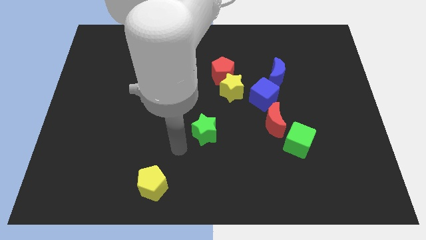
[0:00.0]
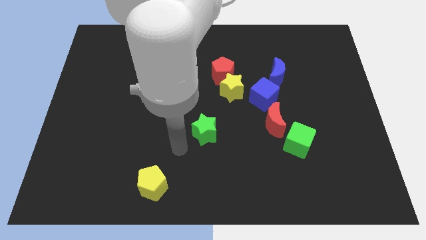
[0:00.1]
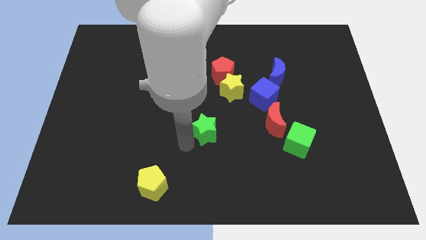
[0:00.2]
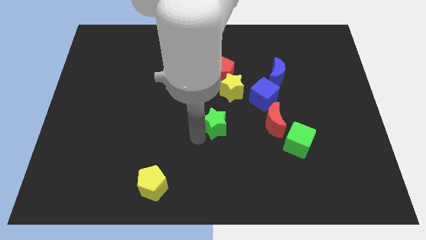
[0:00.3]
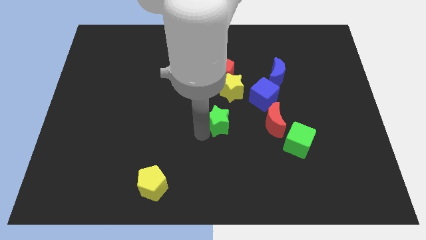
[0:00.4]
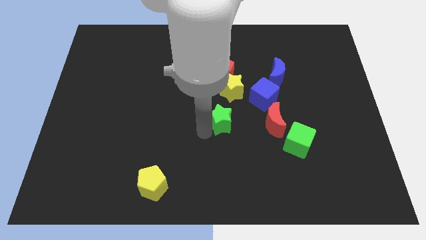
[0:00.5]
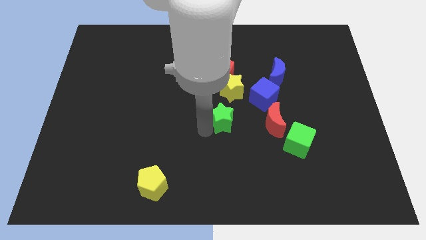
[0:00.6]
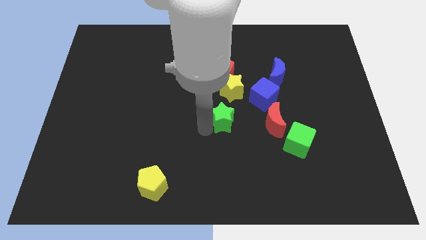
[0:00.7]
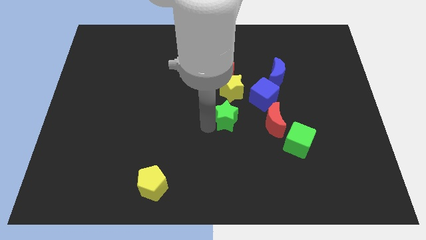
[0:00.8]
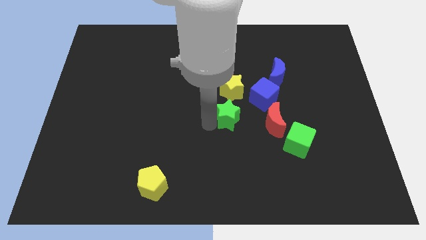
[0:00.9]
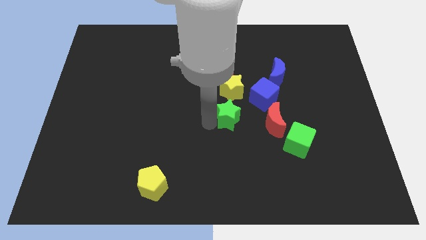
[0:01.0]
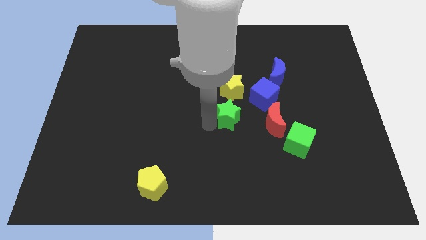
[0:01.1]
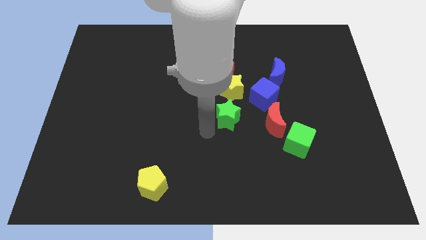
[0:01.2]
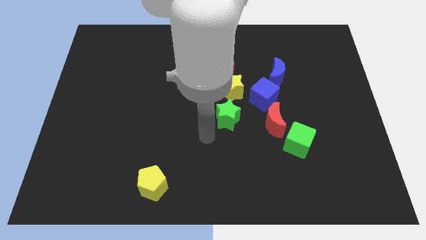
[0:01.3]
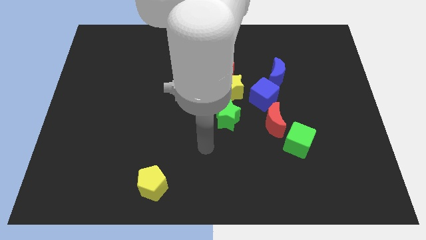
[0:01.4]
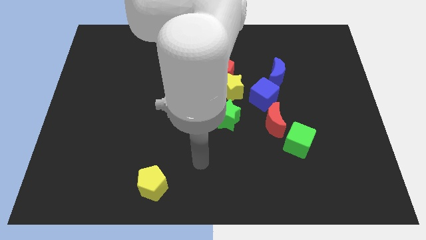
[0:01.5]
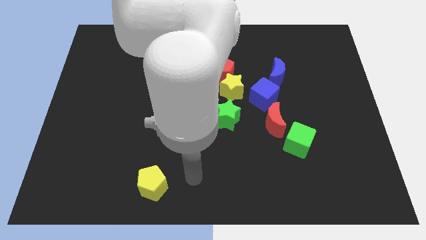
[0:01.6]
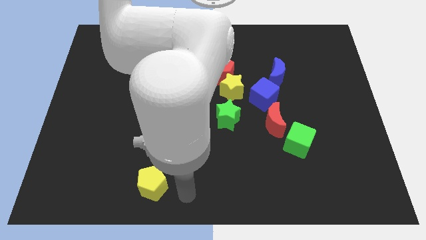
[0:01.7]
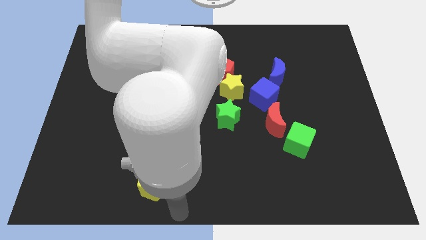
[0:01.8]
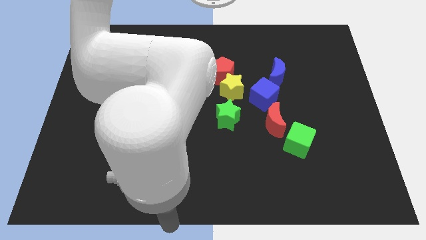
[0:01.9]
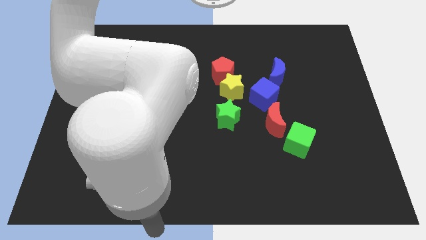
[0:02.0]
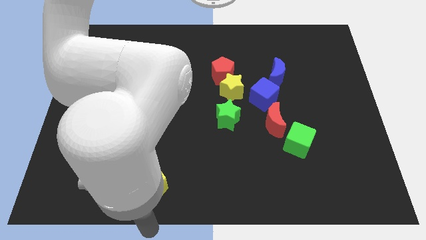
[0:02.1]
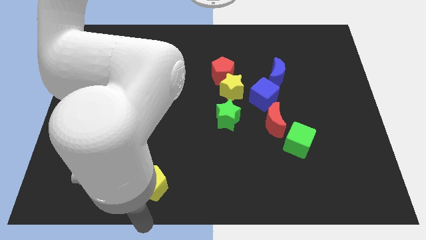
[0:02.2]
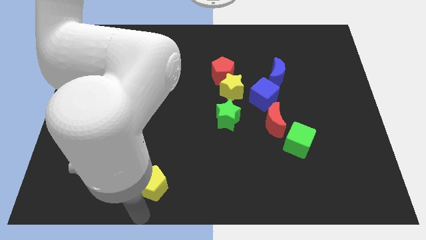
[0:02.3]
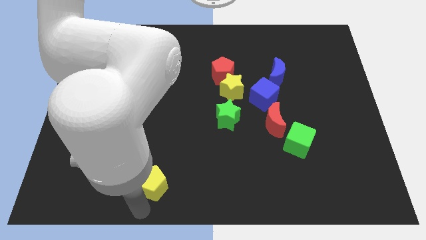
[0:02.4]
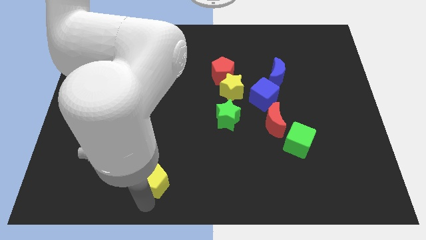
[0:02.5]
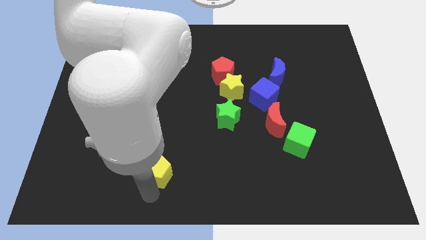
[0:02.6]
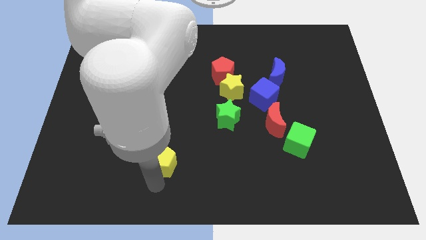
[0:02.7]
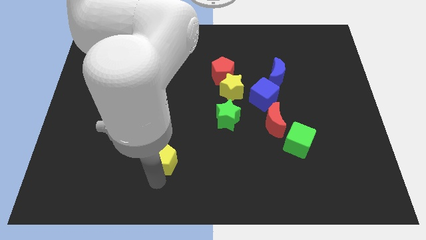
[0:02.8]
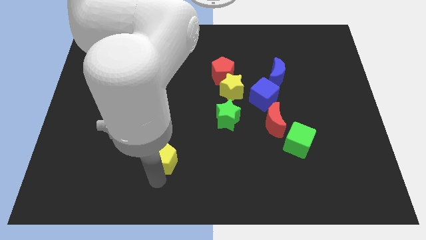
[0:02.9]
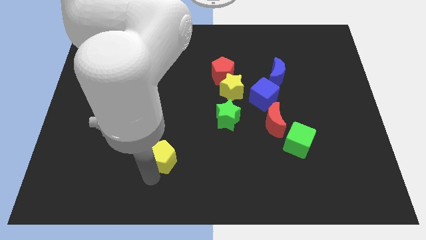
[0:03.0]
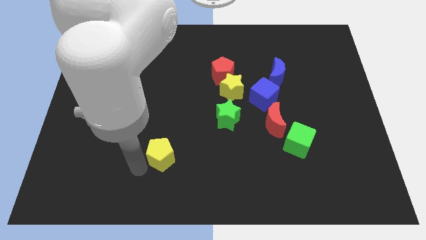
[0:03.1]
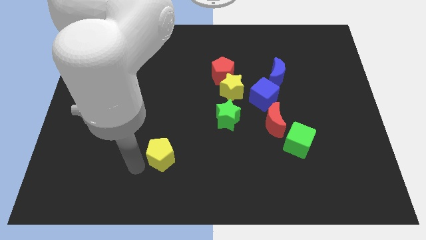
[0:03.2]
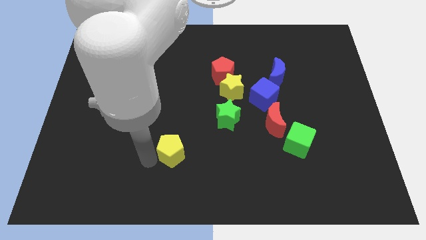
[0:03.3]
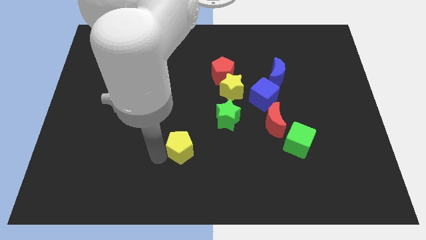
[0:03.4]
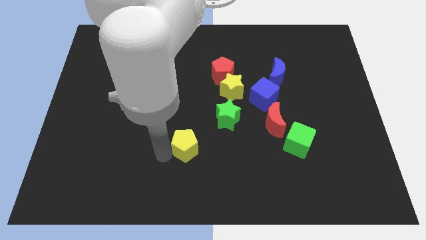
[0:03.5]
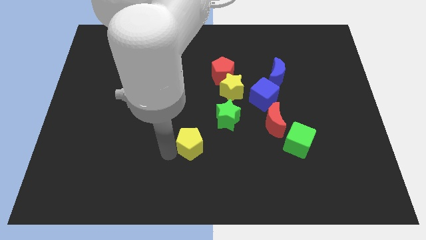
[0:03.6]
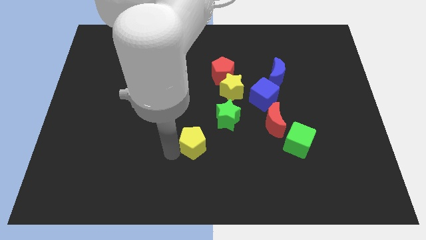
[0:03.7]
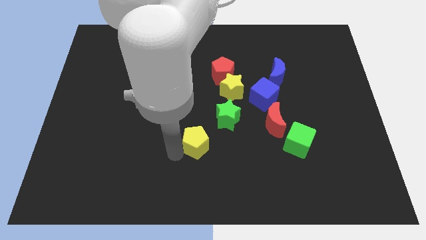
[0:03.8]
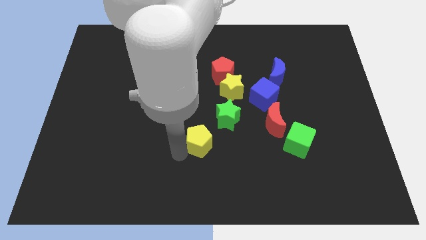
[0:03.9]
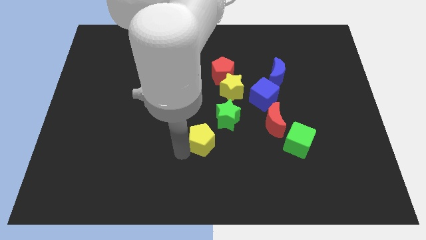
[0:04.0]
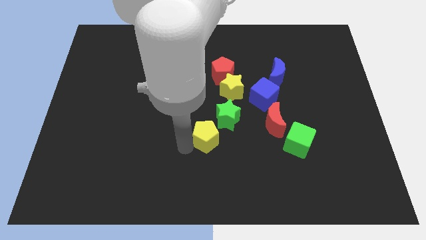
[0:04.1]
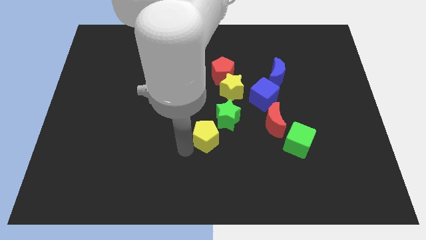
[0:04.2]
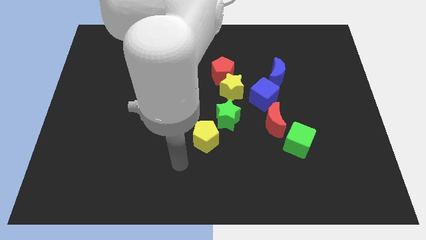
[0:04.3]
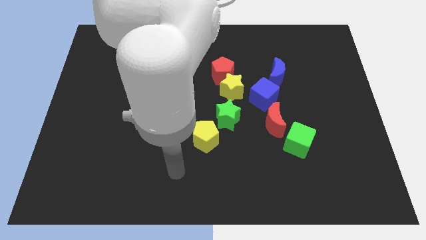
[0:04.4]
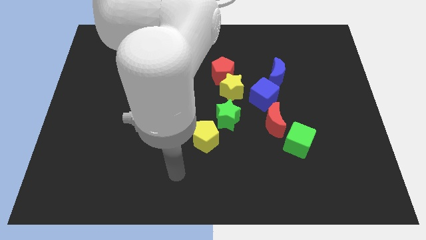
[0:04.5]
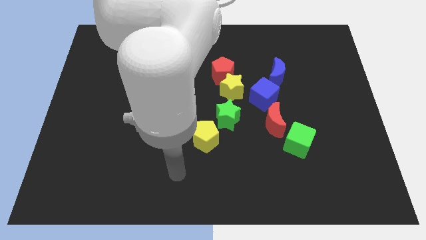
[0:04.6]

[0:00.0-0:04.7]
move green star and yellow pentagon towards the yellow star

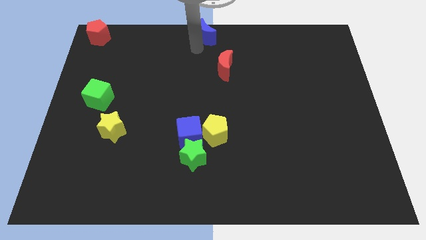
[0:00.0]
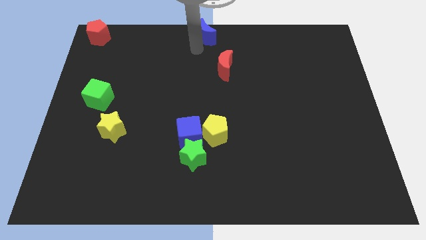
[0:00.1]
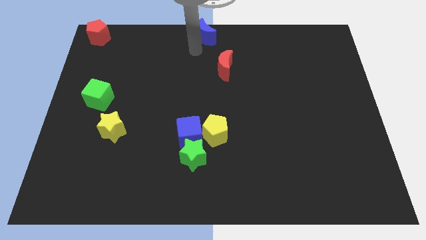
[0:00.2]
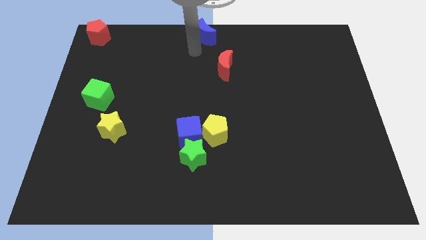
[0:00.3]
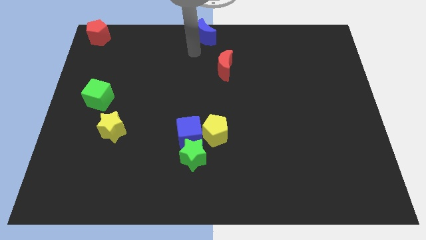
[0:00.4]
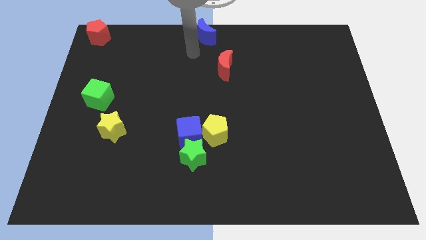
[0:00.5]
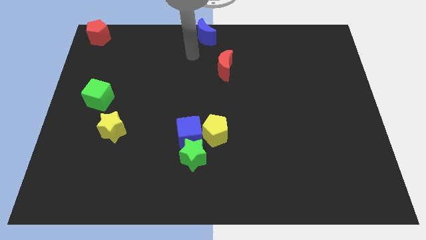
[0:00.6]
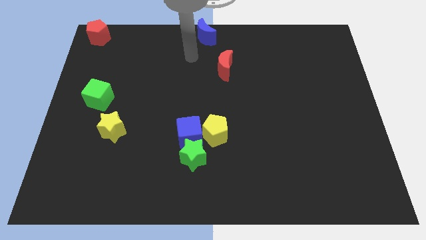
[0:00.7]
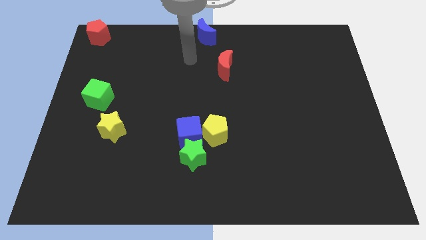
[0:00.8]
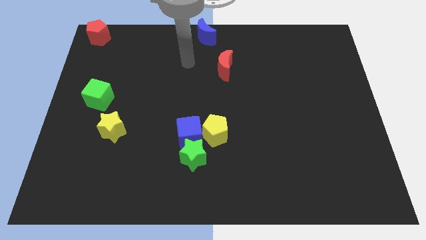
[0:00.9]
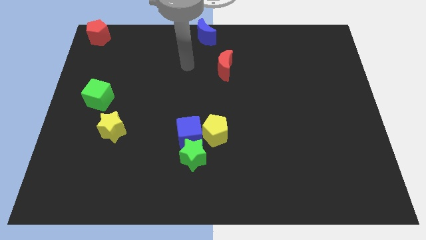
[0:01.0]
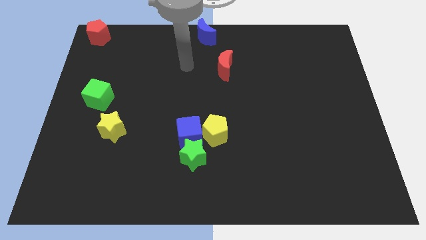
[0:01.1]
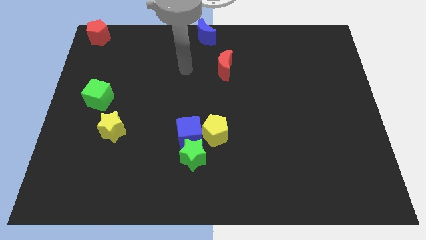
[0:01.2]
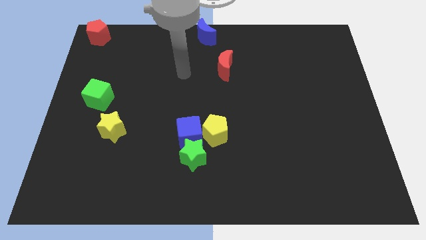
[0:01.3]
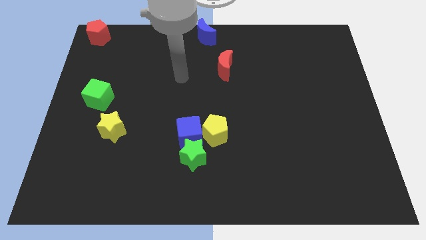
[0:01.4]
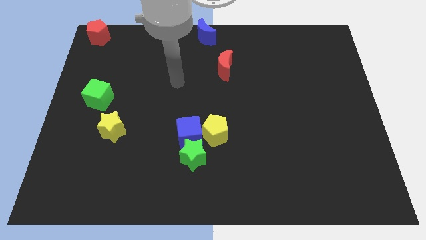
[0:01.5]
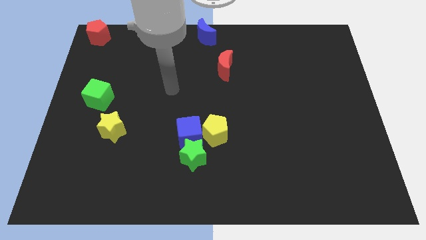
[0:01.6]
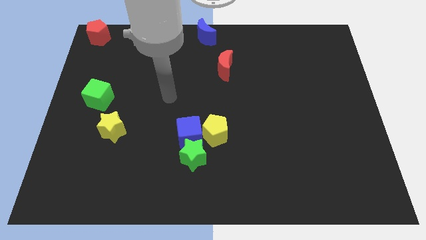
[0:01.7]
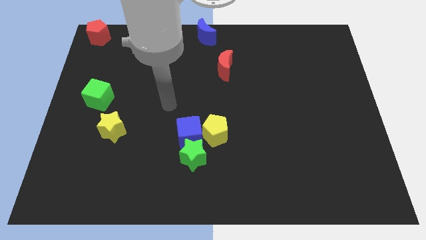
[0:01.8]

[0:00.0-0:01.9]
move your arm downwards

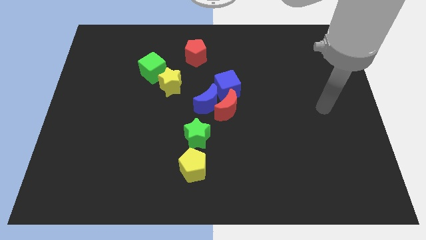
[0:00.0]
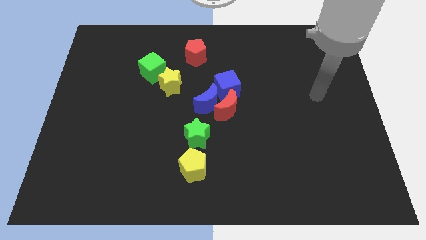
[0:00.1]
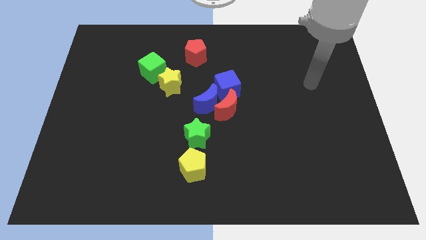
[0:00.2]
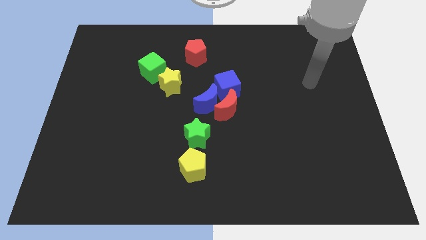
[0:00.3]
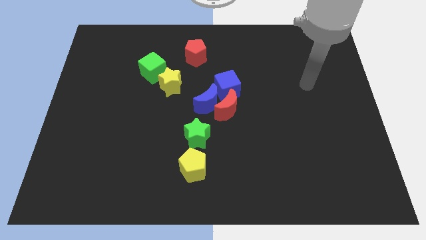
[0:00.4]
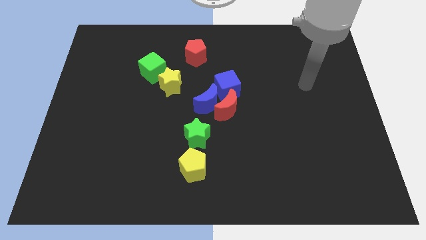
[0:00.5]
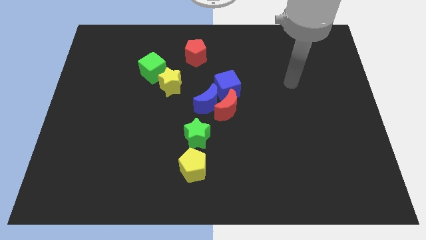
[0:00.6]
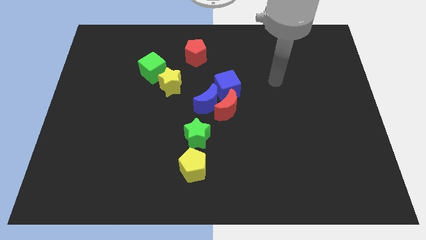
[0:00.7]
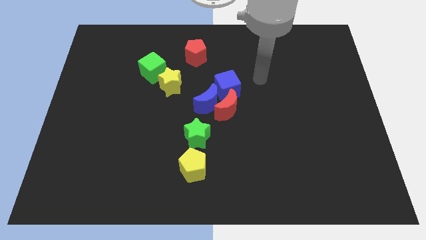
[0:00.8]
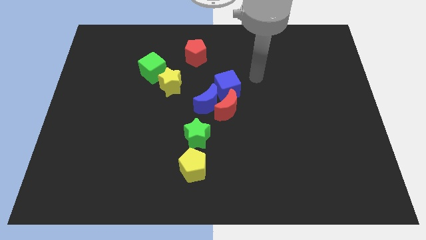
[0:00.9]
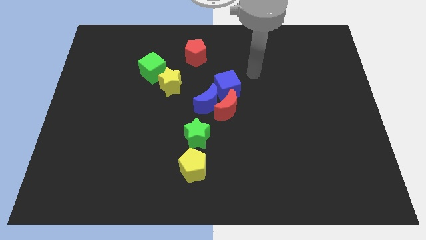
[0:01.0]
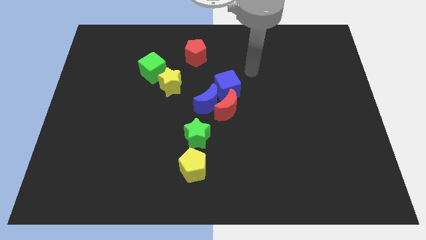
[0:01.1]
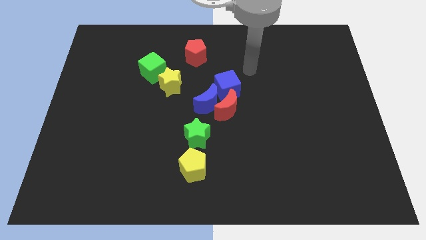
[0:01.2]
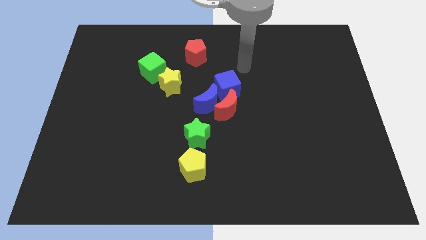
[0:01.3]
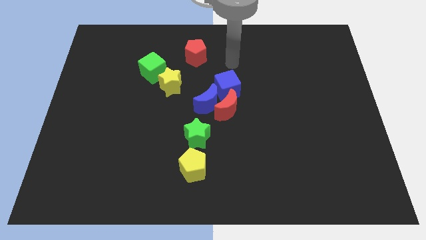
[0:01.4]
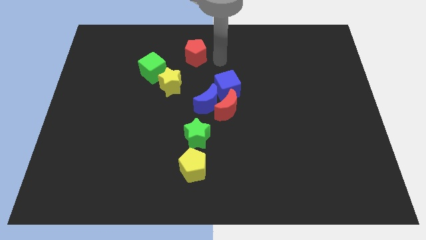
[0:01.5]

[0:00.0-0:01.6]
move your arm towards the right side of the red pentagon

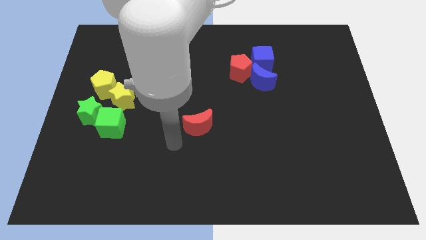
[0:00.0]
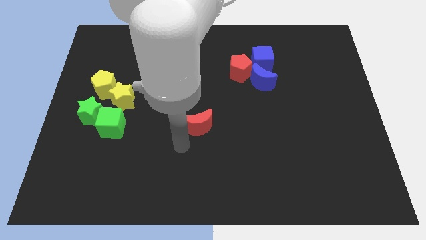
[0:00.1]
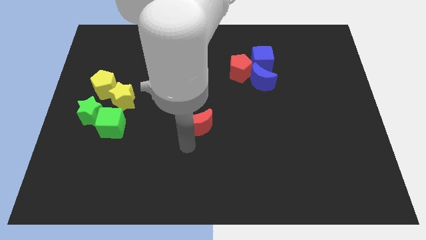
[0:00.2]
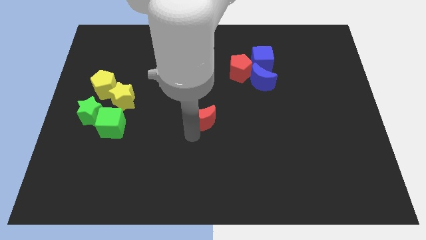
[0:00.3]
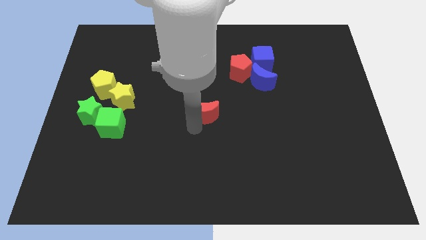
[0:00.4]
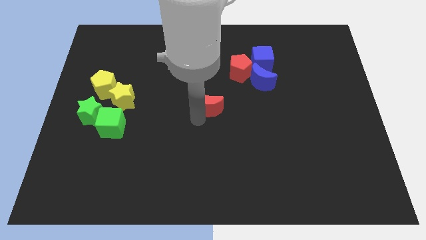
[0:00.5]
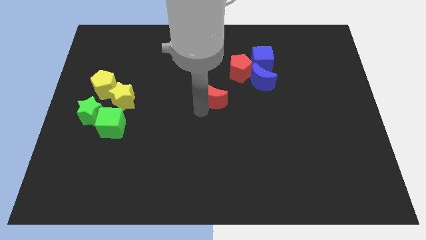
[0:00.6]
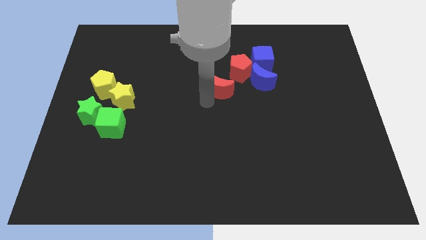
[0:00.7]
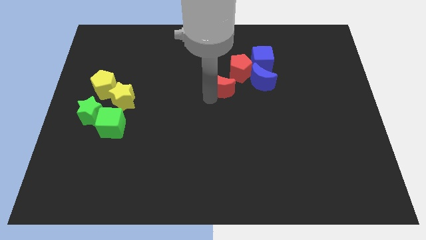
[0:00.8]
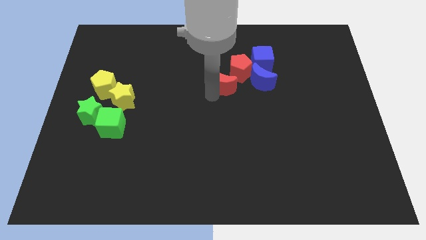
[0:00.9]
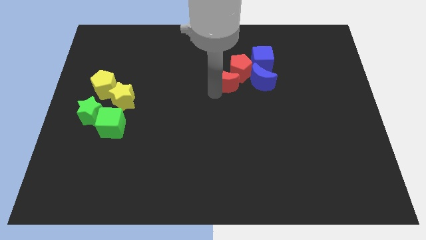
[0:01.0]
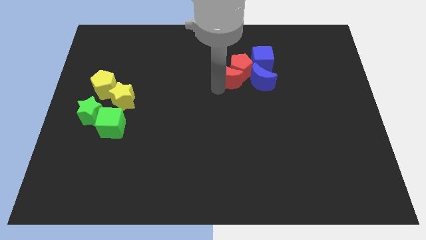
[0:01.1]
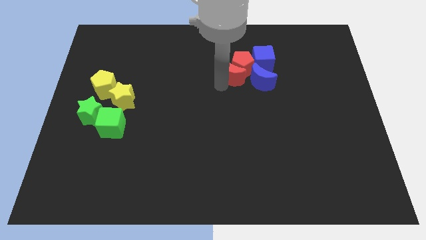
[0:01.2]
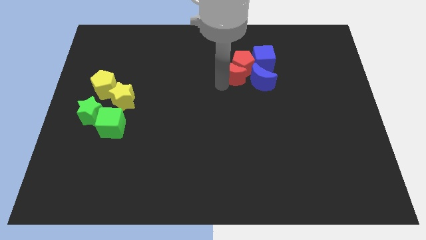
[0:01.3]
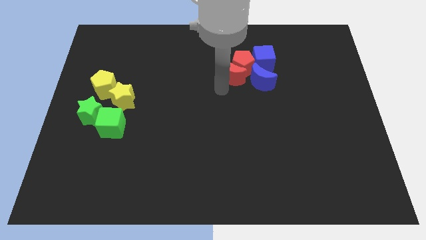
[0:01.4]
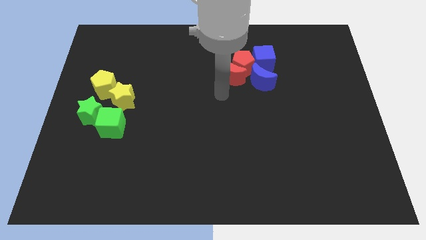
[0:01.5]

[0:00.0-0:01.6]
push the red moon into red pentagon
